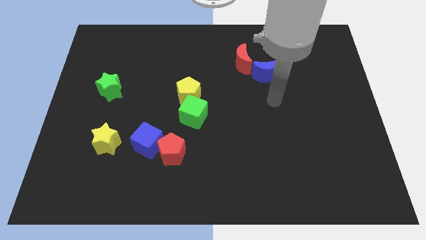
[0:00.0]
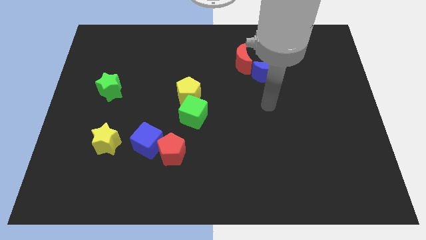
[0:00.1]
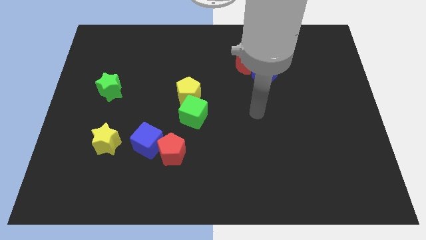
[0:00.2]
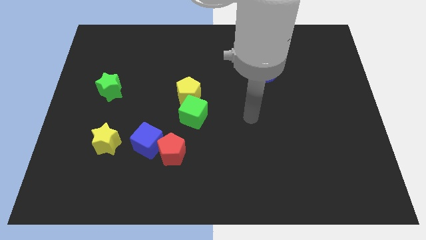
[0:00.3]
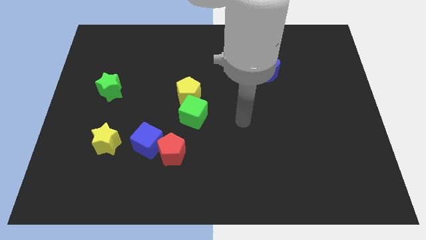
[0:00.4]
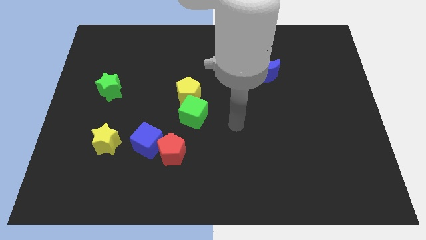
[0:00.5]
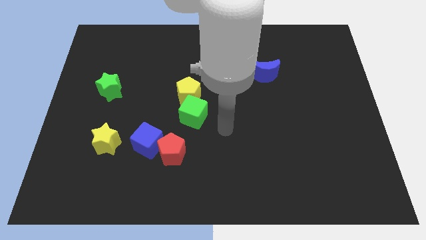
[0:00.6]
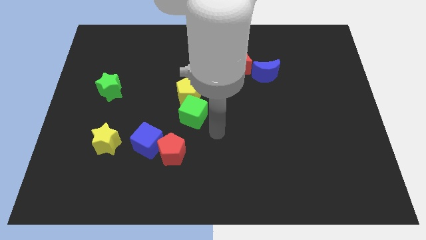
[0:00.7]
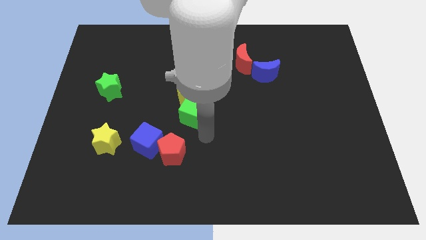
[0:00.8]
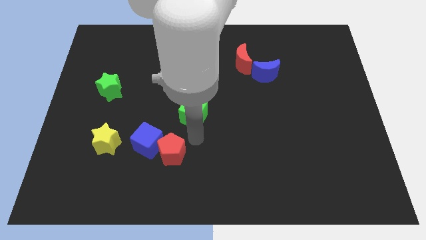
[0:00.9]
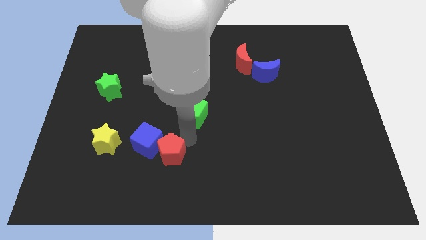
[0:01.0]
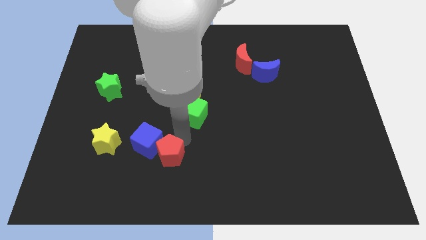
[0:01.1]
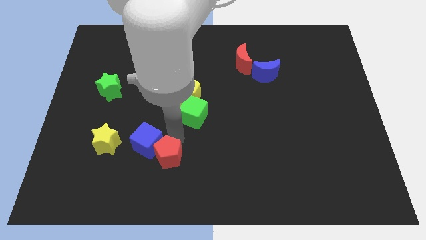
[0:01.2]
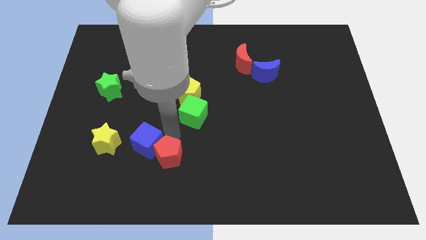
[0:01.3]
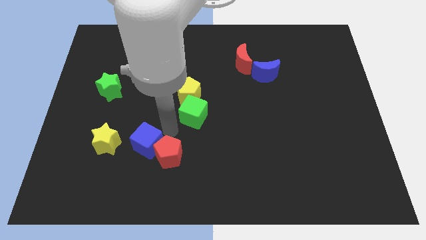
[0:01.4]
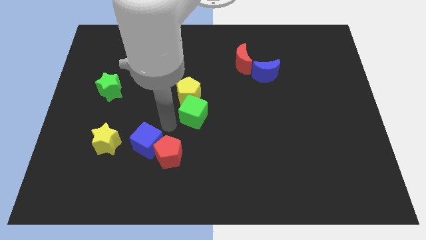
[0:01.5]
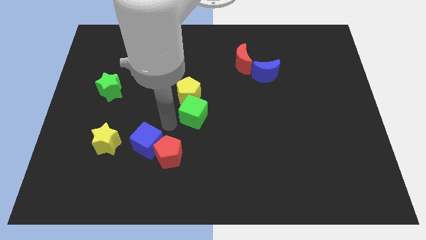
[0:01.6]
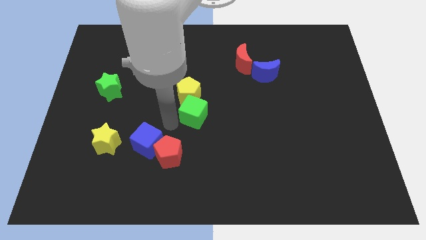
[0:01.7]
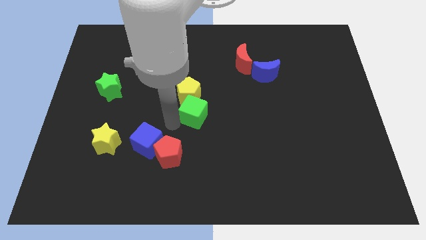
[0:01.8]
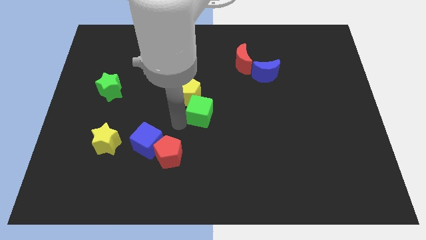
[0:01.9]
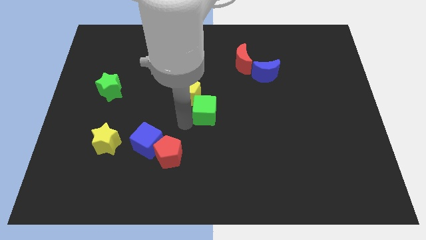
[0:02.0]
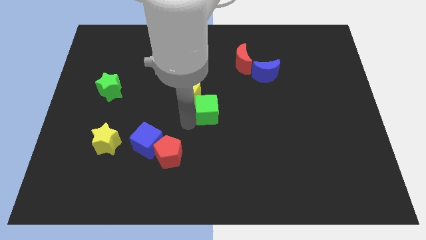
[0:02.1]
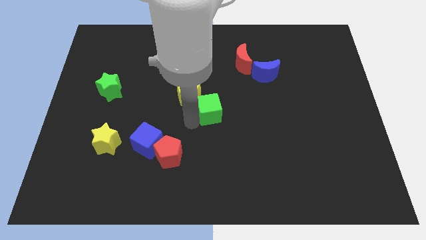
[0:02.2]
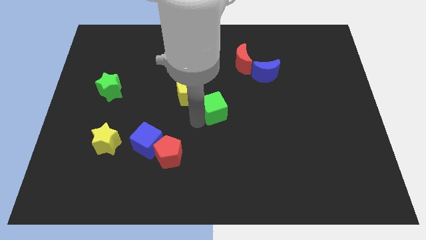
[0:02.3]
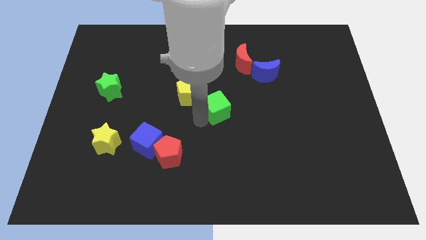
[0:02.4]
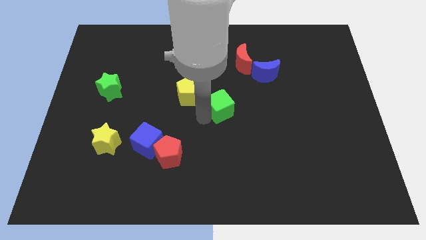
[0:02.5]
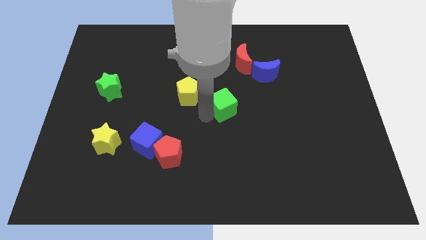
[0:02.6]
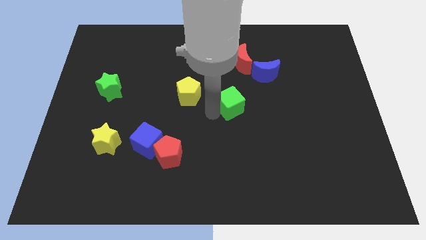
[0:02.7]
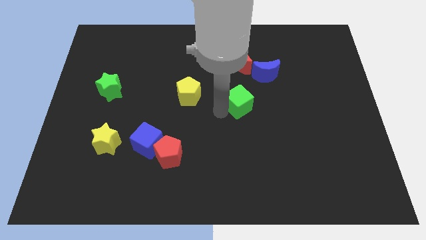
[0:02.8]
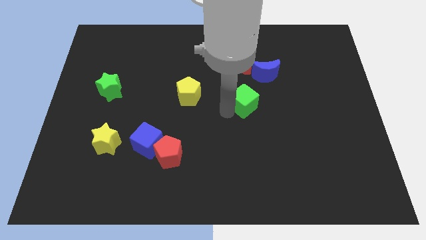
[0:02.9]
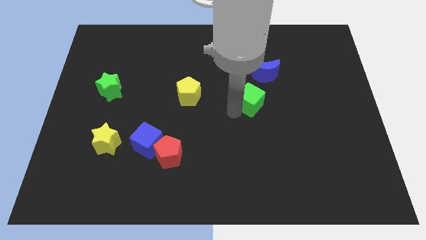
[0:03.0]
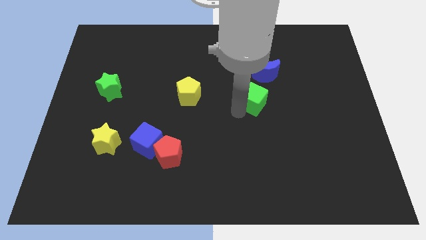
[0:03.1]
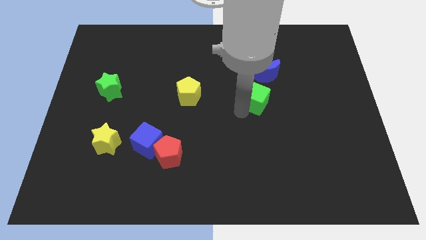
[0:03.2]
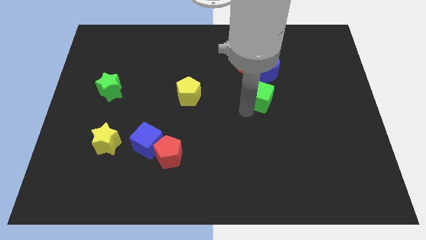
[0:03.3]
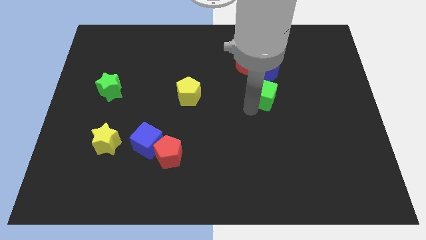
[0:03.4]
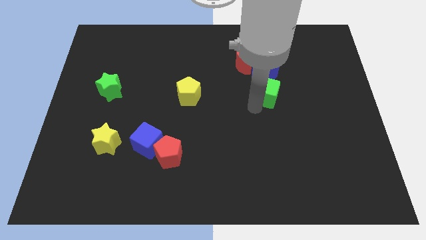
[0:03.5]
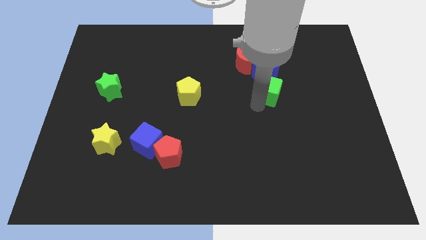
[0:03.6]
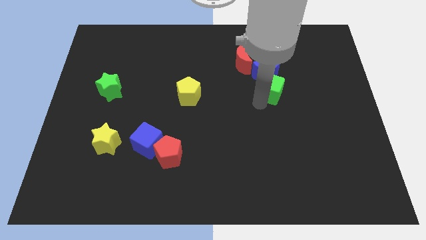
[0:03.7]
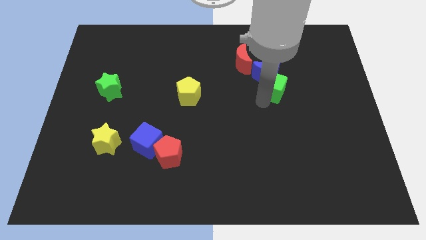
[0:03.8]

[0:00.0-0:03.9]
move the green cube to the blue moon

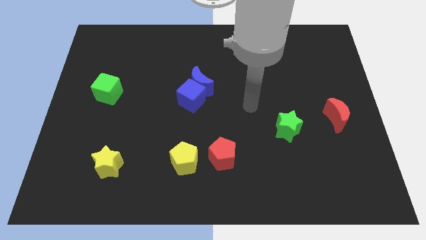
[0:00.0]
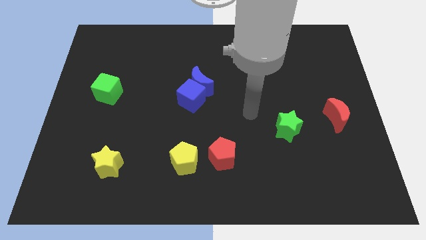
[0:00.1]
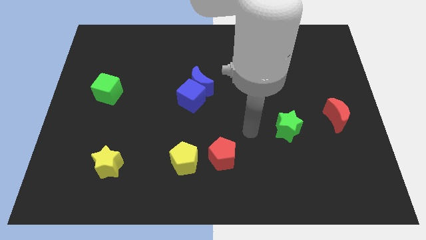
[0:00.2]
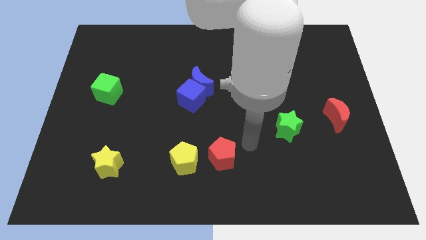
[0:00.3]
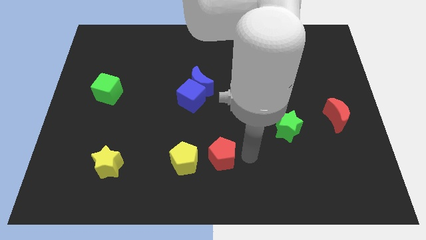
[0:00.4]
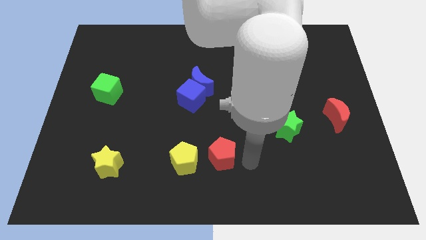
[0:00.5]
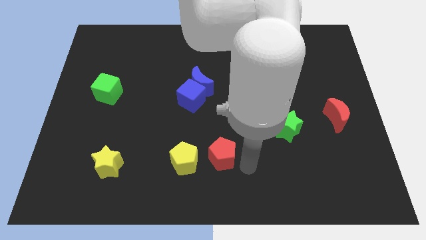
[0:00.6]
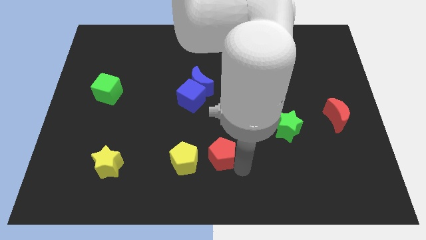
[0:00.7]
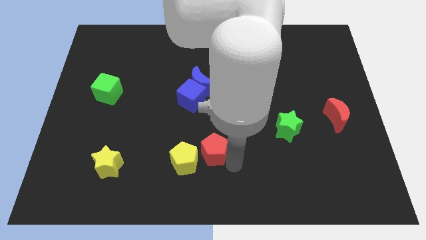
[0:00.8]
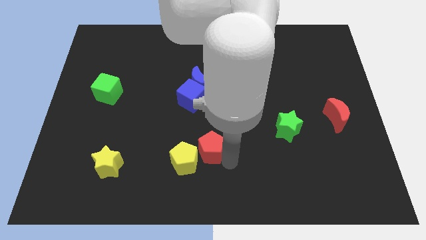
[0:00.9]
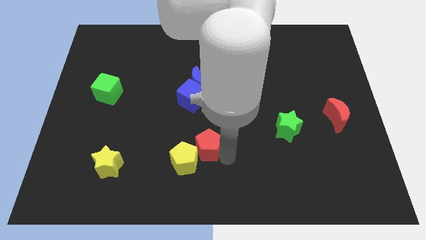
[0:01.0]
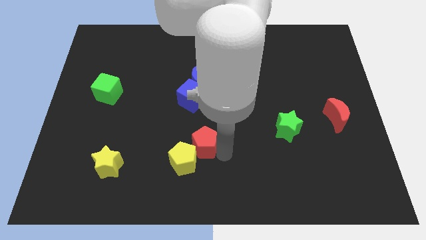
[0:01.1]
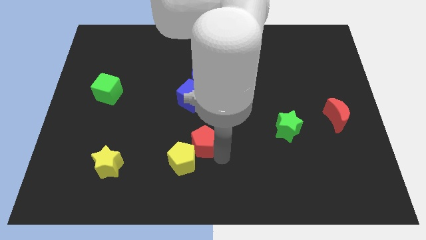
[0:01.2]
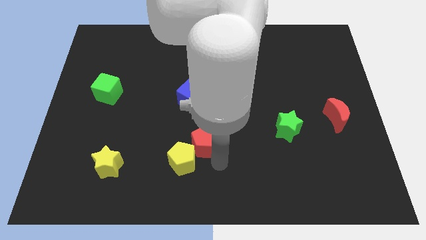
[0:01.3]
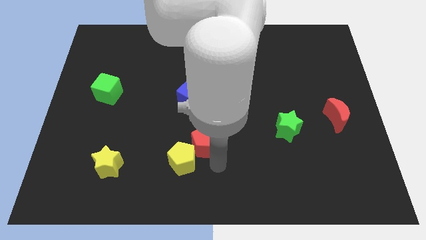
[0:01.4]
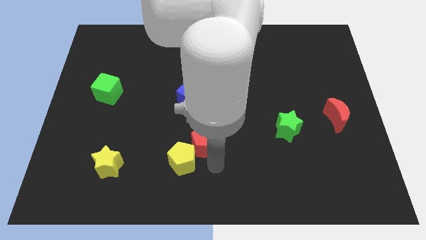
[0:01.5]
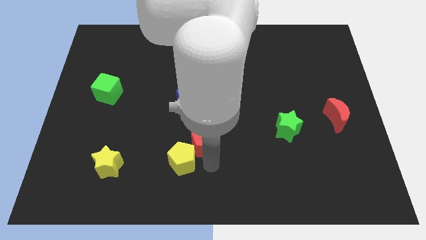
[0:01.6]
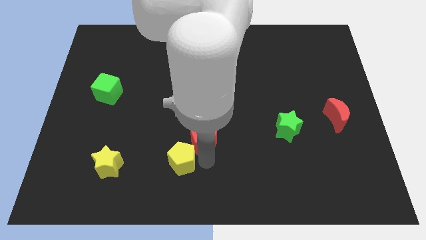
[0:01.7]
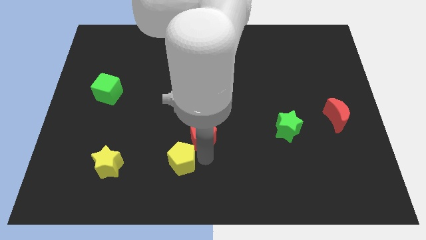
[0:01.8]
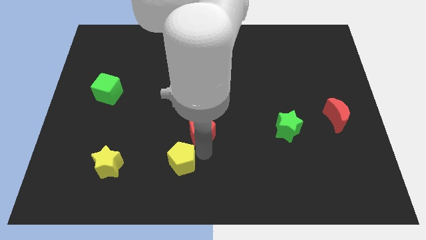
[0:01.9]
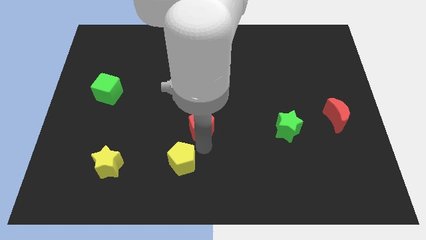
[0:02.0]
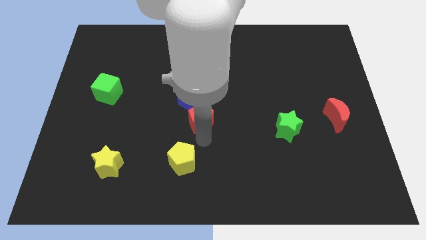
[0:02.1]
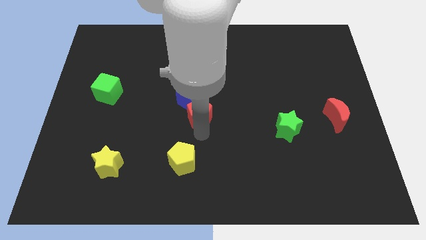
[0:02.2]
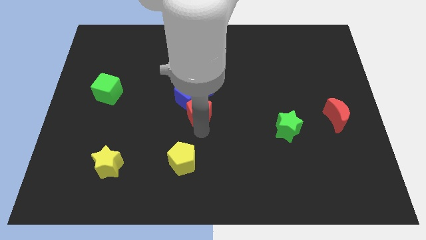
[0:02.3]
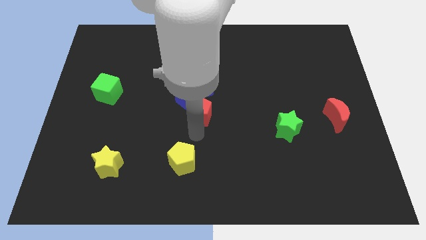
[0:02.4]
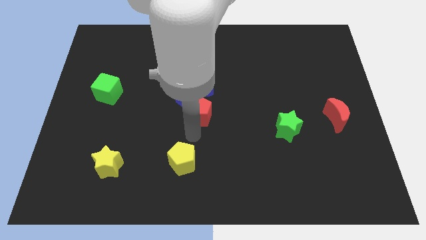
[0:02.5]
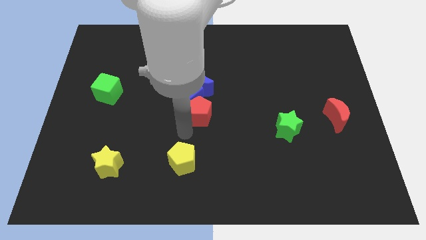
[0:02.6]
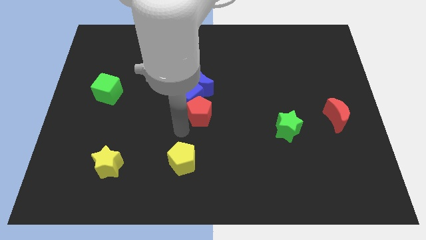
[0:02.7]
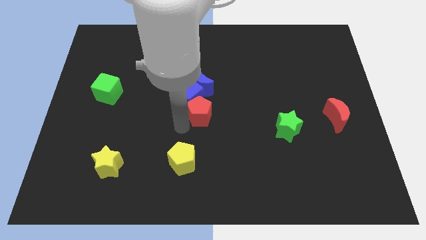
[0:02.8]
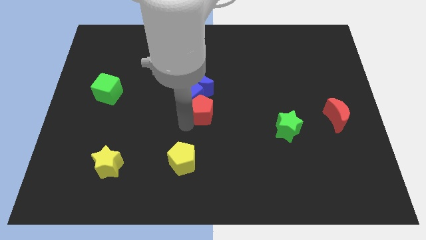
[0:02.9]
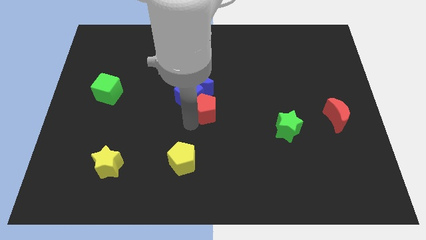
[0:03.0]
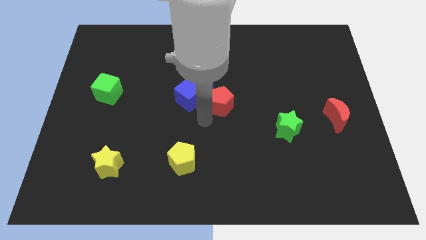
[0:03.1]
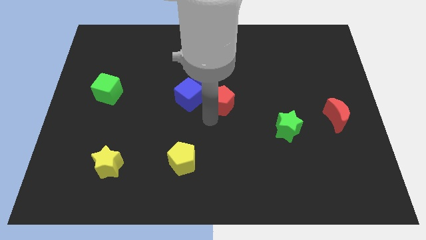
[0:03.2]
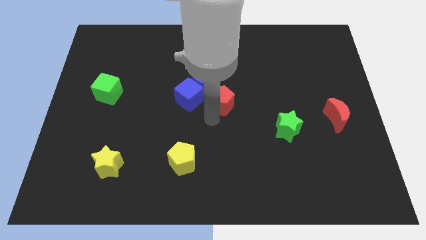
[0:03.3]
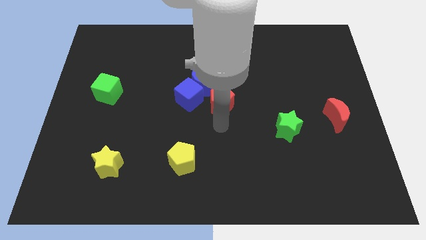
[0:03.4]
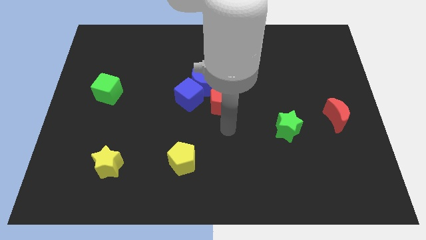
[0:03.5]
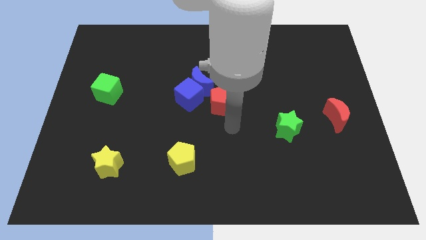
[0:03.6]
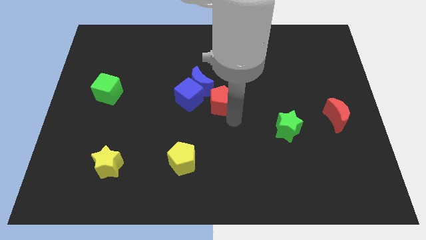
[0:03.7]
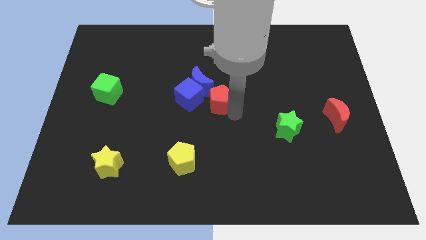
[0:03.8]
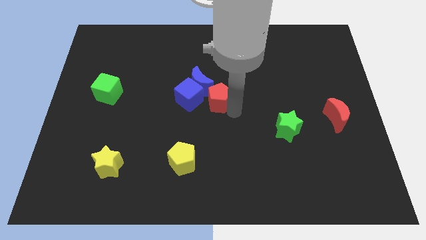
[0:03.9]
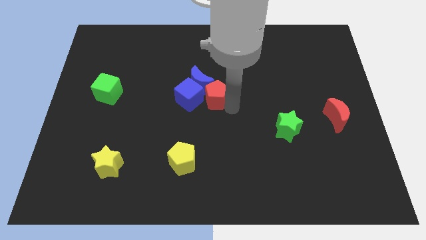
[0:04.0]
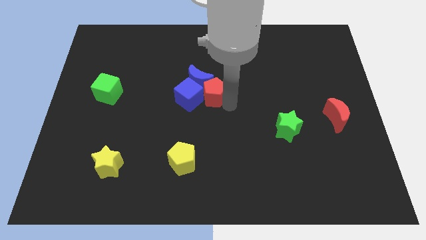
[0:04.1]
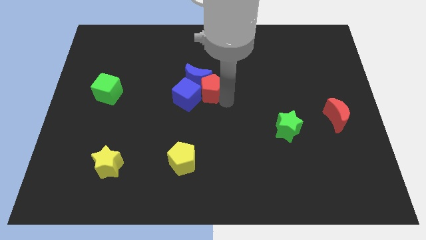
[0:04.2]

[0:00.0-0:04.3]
slide the red pentagon close to the blue moon
